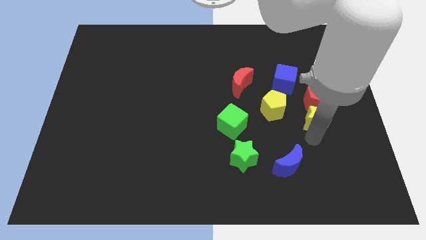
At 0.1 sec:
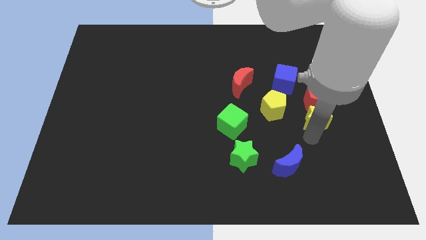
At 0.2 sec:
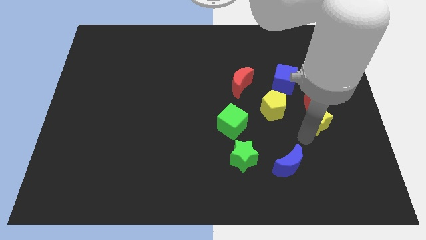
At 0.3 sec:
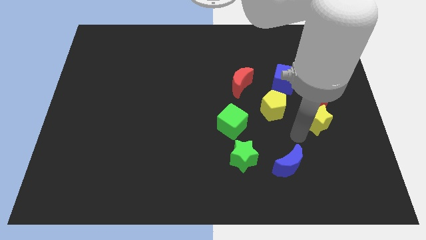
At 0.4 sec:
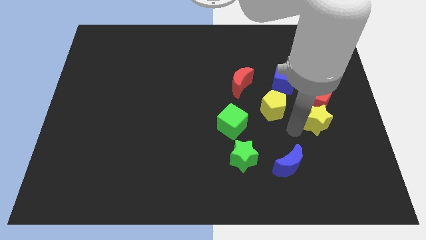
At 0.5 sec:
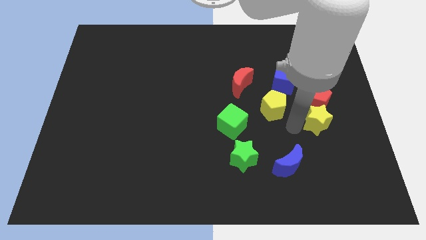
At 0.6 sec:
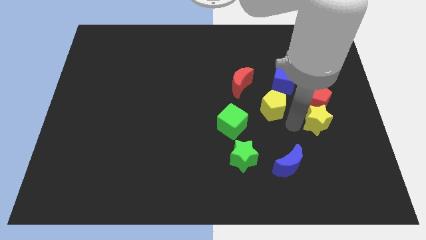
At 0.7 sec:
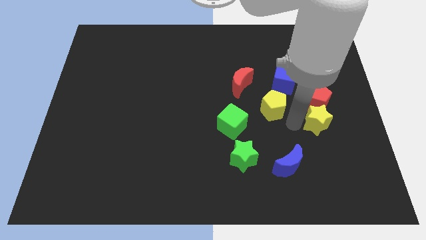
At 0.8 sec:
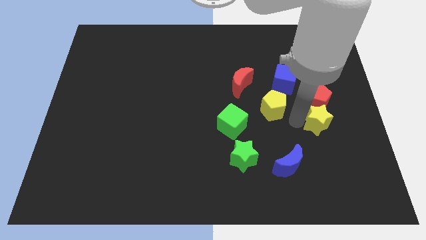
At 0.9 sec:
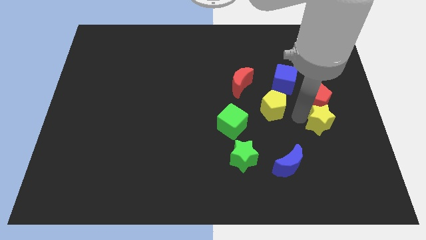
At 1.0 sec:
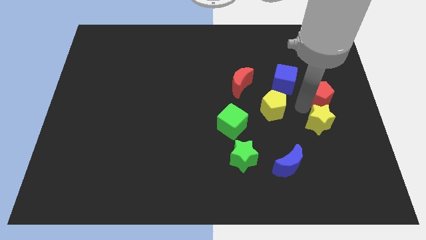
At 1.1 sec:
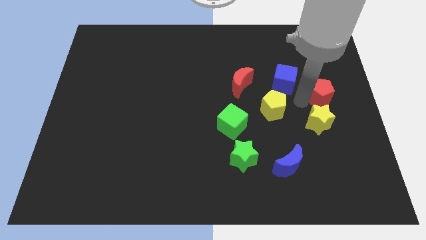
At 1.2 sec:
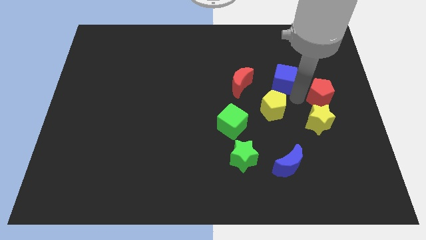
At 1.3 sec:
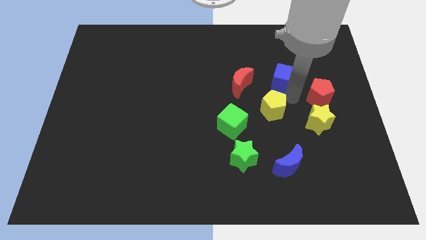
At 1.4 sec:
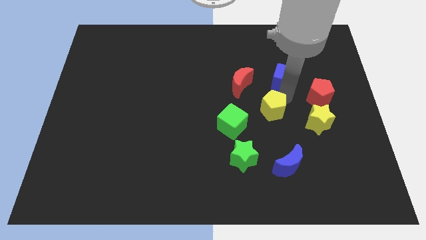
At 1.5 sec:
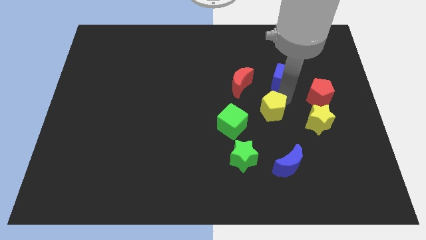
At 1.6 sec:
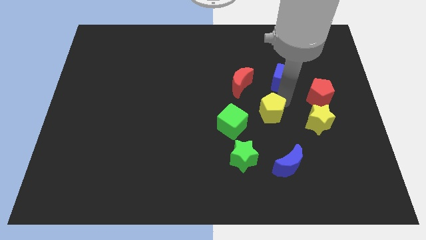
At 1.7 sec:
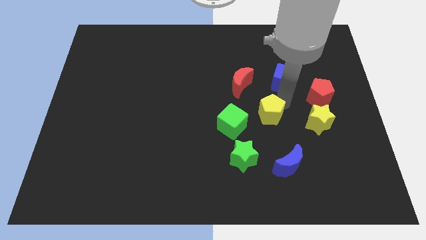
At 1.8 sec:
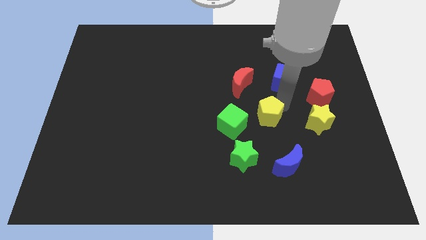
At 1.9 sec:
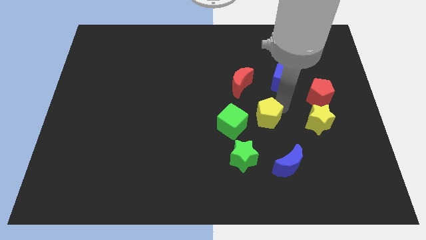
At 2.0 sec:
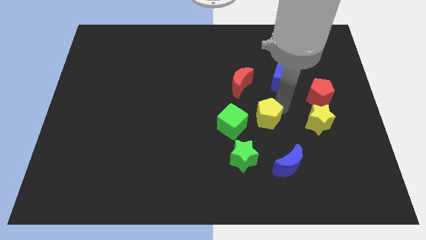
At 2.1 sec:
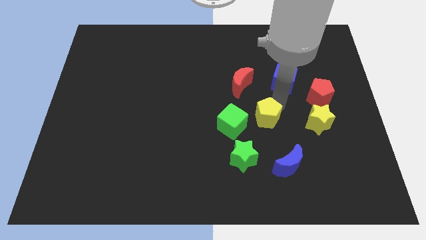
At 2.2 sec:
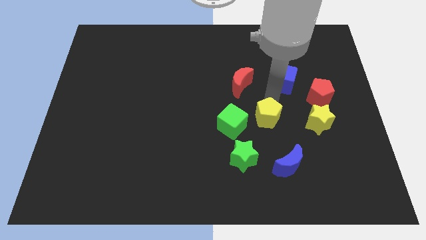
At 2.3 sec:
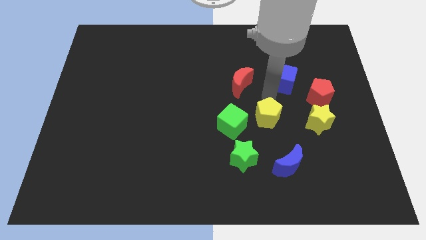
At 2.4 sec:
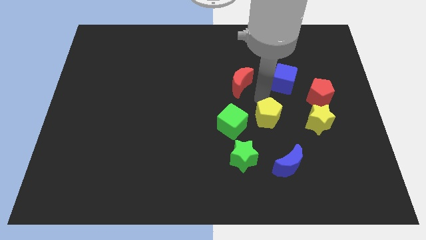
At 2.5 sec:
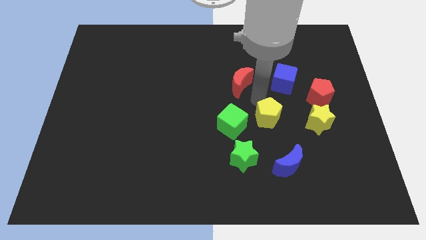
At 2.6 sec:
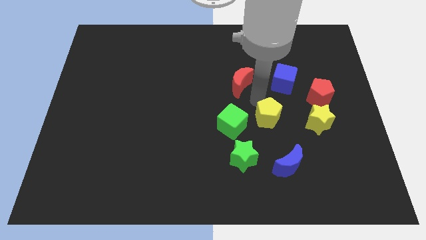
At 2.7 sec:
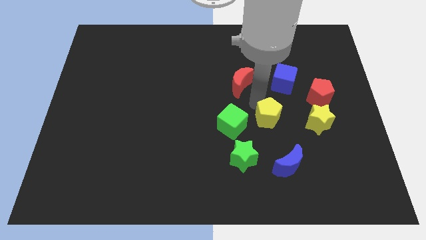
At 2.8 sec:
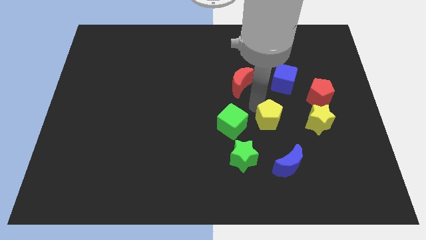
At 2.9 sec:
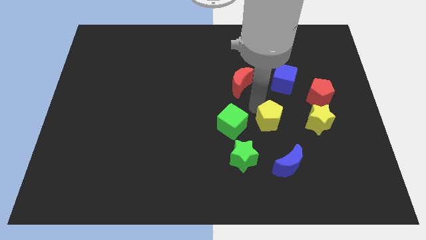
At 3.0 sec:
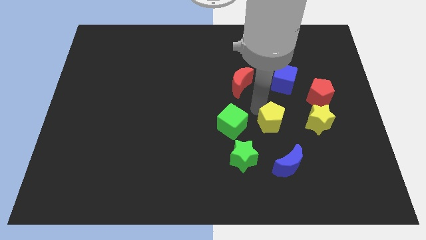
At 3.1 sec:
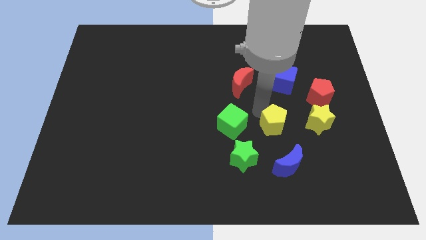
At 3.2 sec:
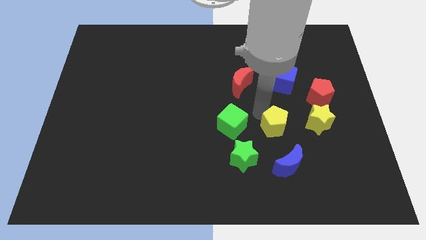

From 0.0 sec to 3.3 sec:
place the yellow pentagon in between the yellow star and green cube

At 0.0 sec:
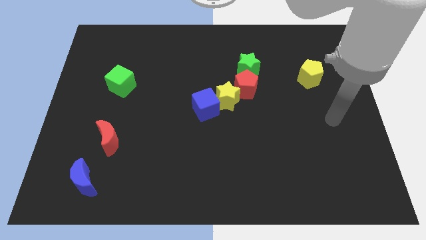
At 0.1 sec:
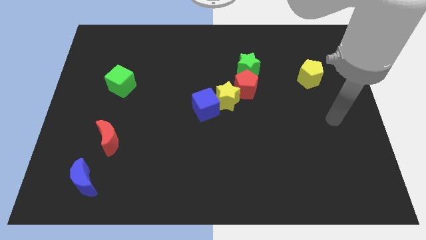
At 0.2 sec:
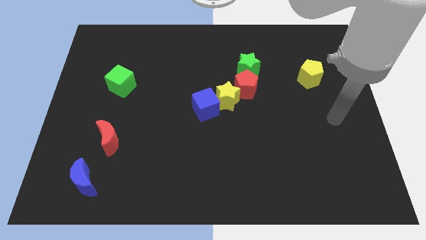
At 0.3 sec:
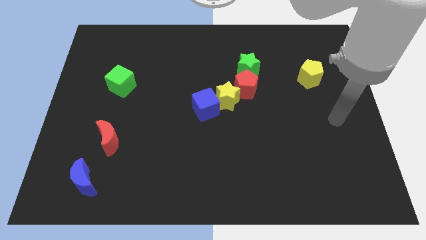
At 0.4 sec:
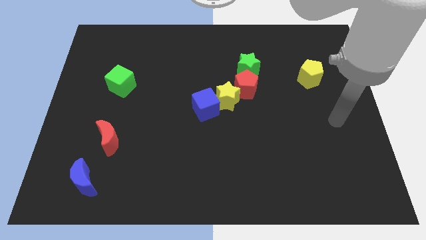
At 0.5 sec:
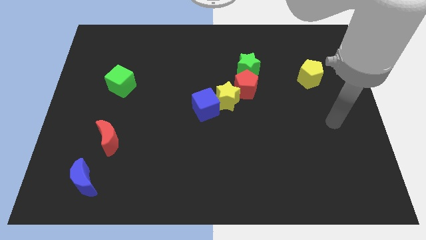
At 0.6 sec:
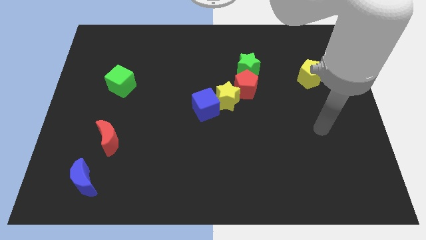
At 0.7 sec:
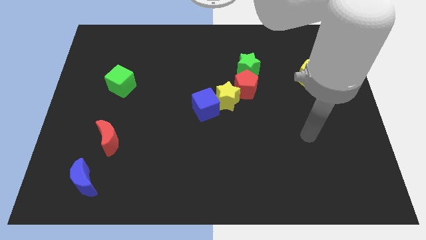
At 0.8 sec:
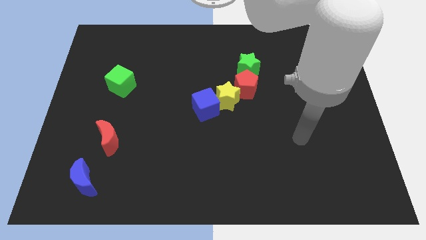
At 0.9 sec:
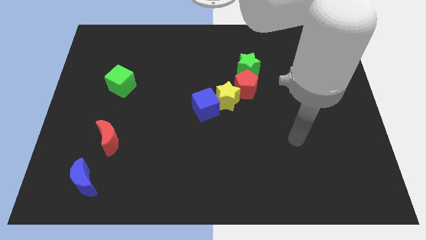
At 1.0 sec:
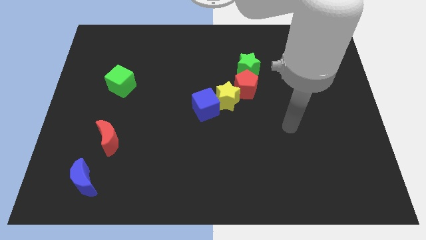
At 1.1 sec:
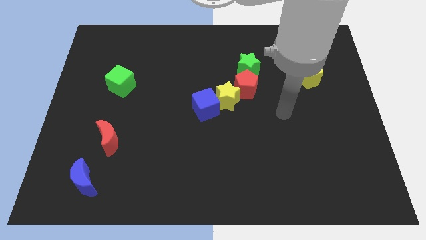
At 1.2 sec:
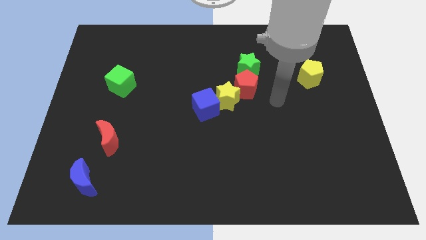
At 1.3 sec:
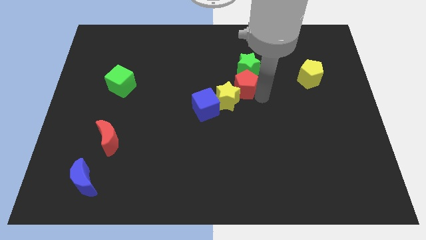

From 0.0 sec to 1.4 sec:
touch the bottom right of the red pentagon

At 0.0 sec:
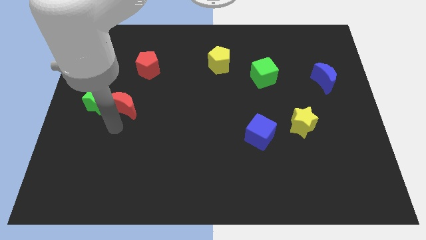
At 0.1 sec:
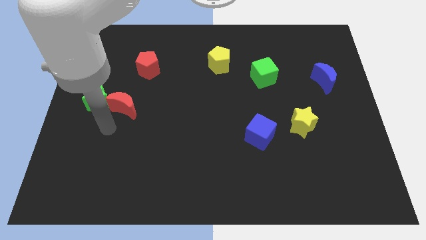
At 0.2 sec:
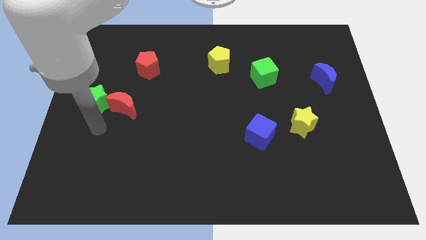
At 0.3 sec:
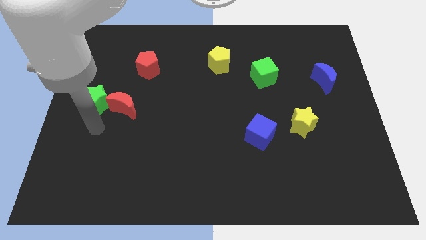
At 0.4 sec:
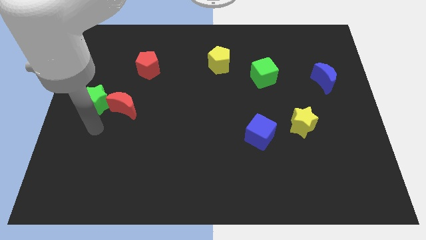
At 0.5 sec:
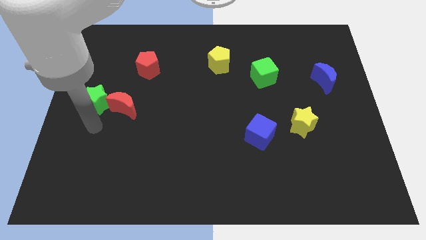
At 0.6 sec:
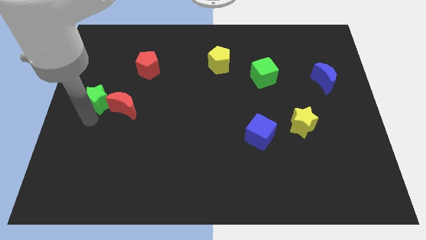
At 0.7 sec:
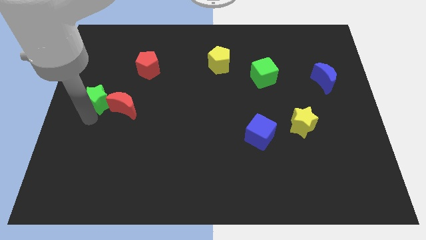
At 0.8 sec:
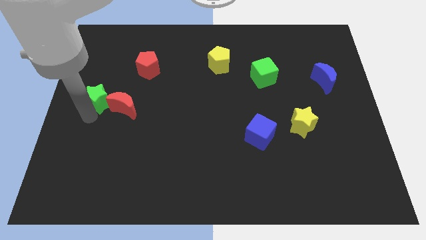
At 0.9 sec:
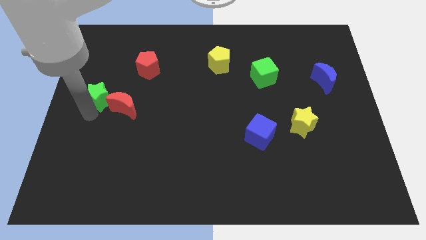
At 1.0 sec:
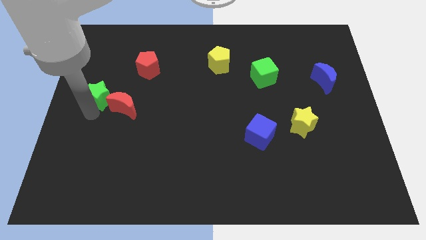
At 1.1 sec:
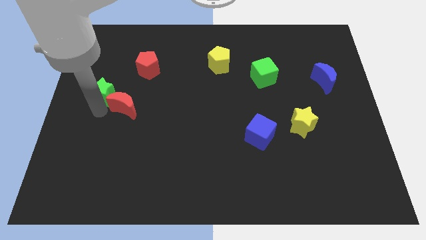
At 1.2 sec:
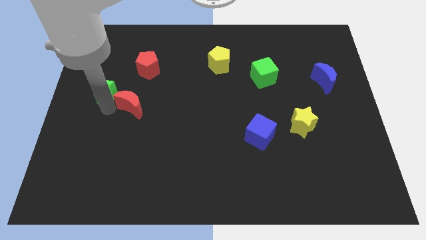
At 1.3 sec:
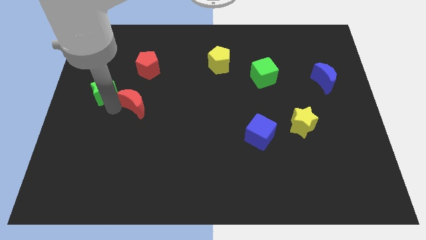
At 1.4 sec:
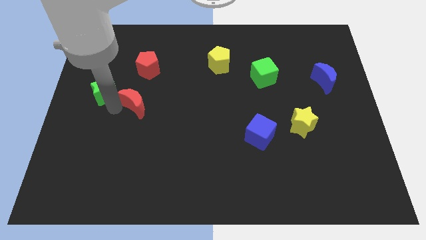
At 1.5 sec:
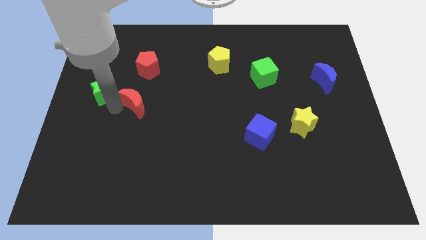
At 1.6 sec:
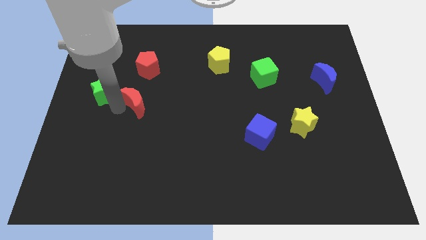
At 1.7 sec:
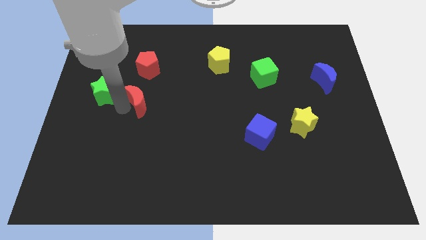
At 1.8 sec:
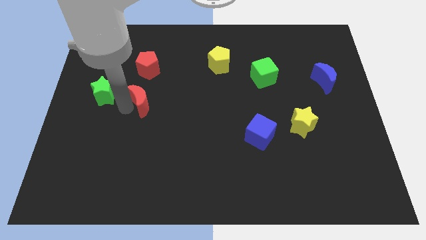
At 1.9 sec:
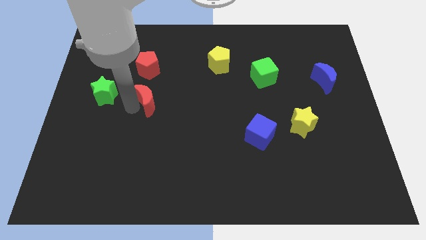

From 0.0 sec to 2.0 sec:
separate green star and red crescent

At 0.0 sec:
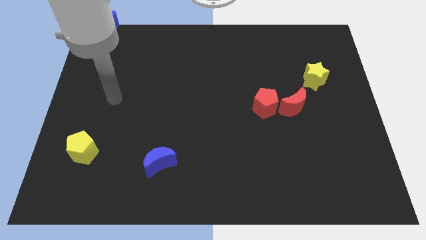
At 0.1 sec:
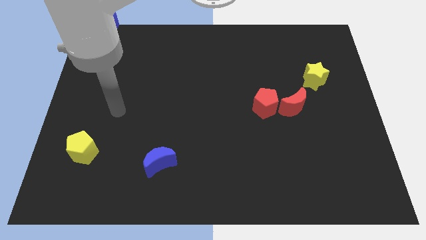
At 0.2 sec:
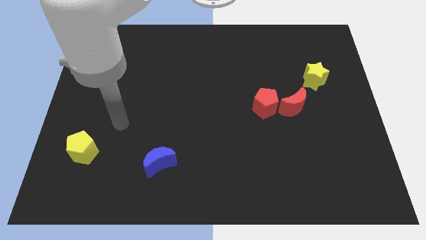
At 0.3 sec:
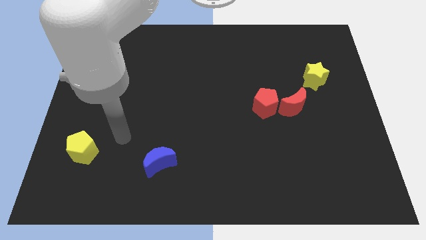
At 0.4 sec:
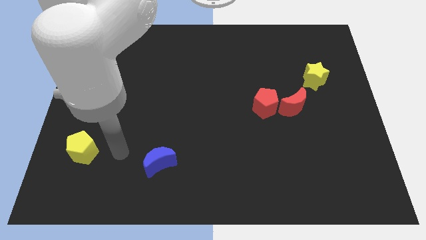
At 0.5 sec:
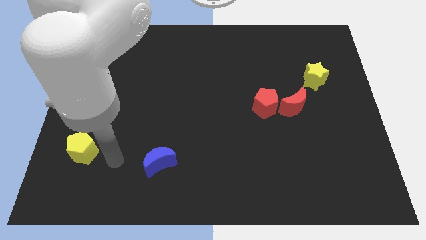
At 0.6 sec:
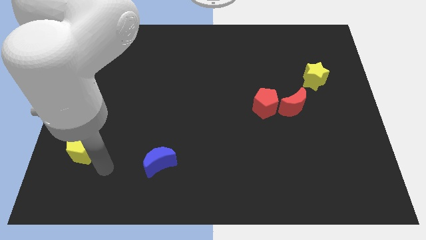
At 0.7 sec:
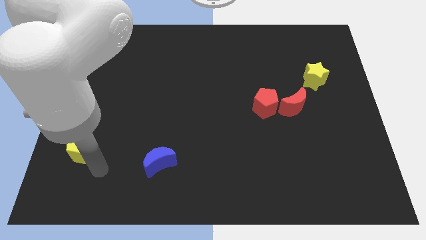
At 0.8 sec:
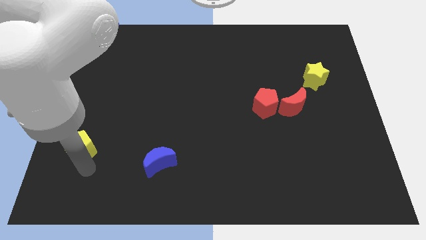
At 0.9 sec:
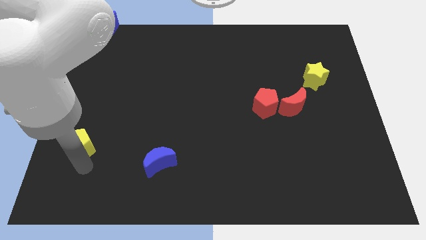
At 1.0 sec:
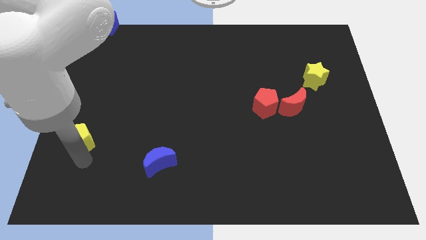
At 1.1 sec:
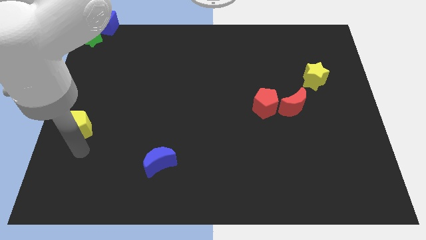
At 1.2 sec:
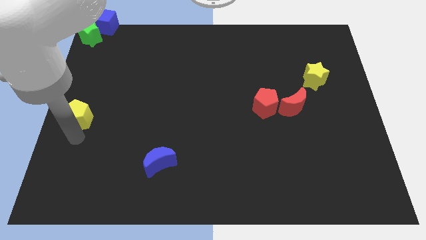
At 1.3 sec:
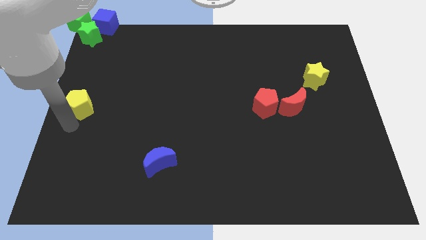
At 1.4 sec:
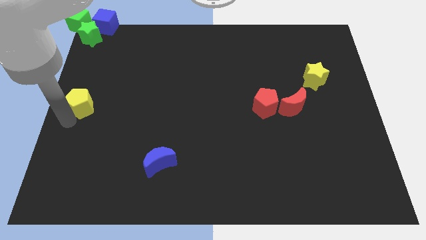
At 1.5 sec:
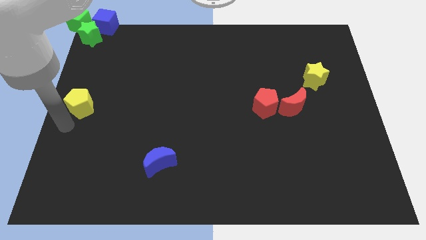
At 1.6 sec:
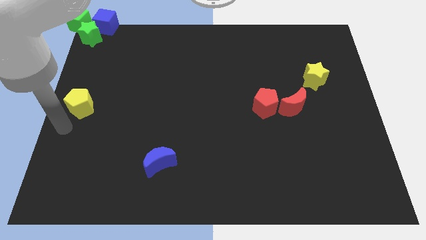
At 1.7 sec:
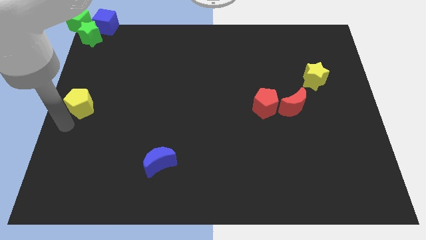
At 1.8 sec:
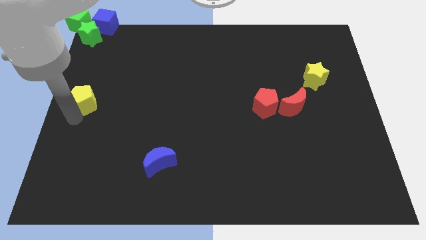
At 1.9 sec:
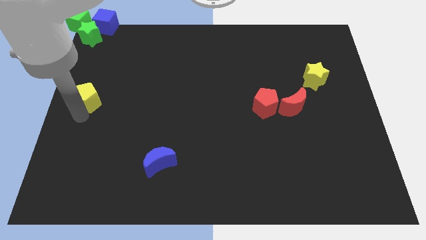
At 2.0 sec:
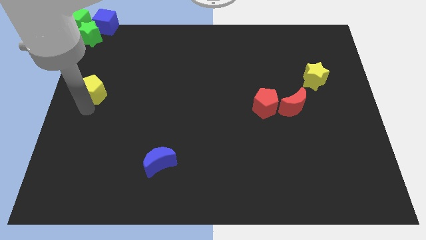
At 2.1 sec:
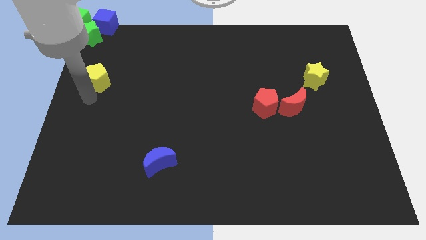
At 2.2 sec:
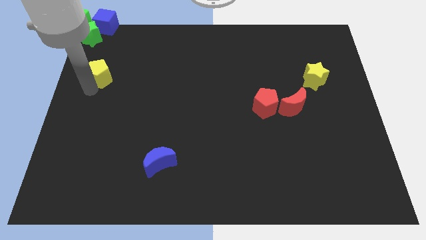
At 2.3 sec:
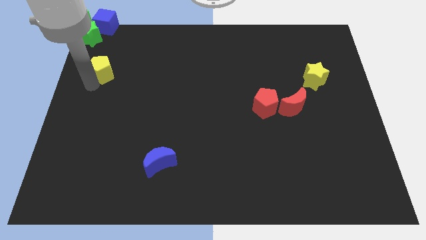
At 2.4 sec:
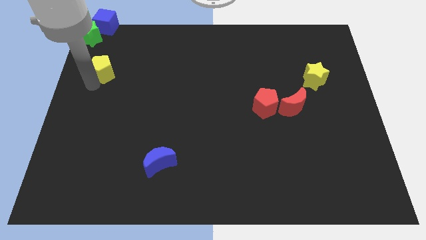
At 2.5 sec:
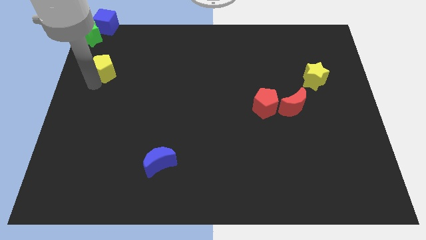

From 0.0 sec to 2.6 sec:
place the yellow pentagon above the blue moon
